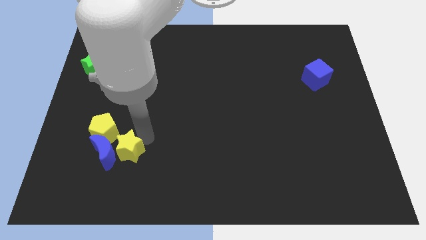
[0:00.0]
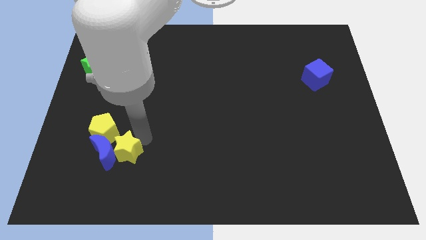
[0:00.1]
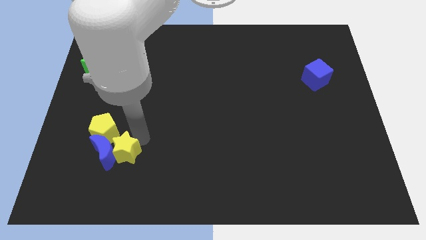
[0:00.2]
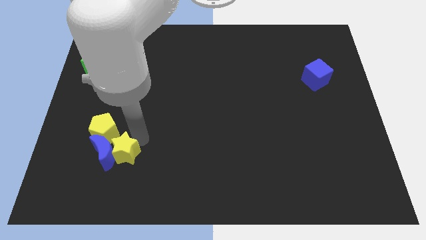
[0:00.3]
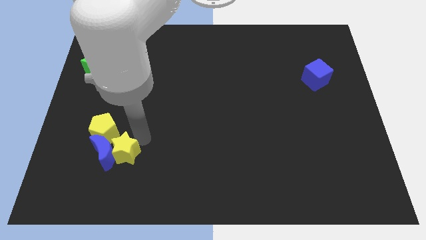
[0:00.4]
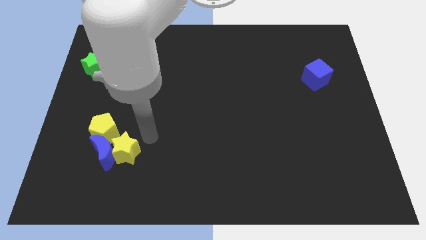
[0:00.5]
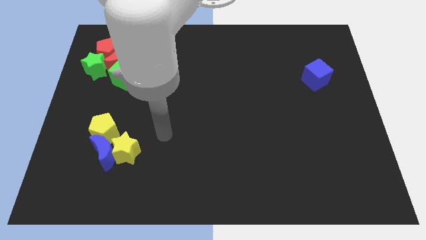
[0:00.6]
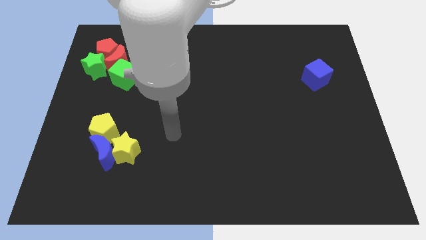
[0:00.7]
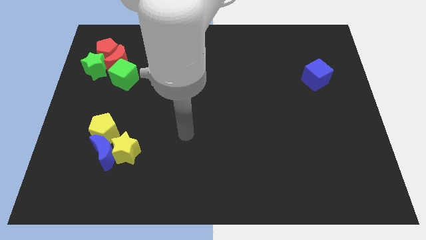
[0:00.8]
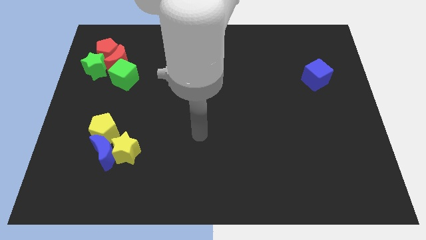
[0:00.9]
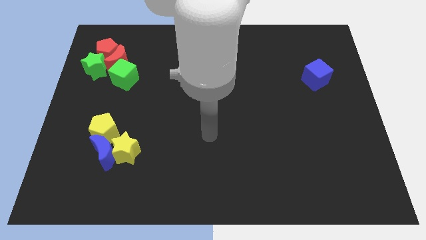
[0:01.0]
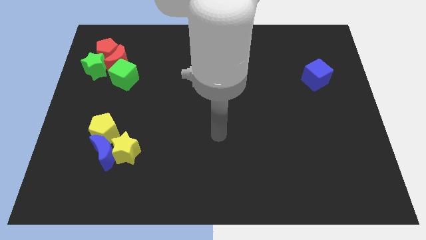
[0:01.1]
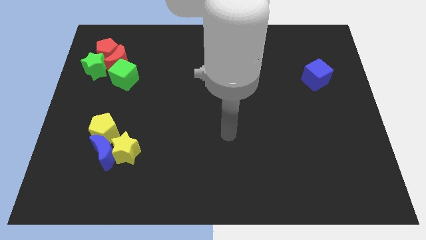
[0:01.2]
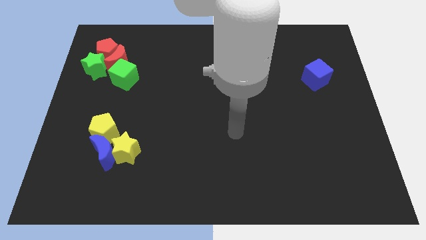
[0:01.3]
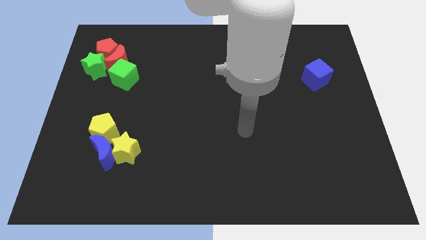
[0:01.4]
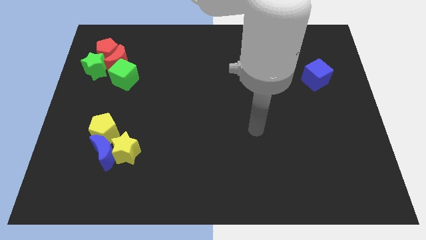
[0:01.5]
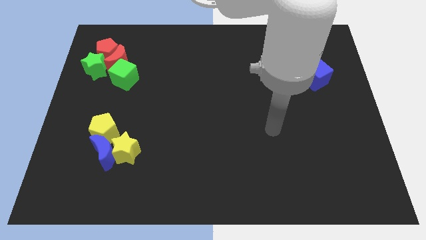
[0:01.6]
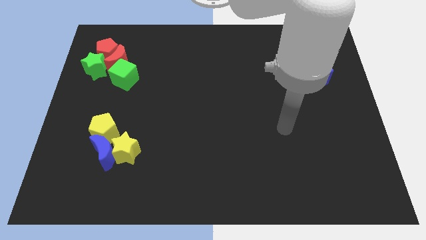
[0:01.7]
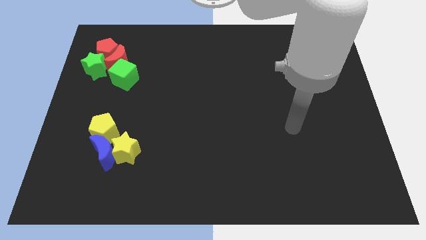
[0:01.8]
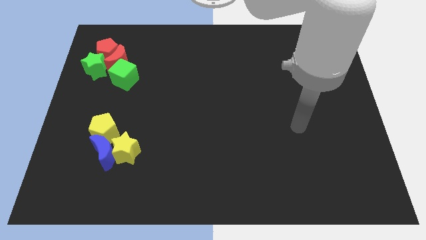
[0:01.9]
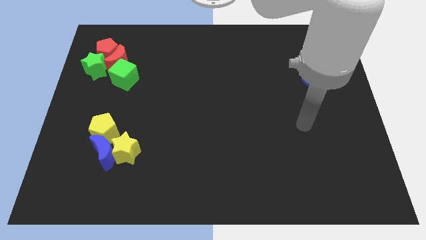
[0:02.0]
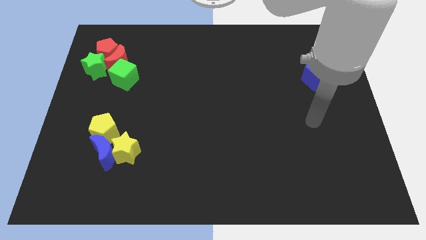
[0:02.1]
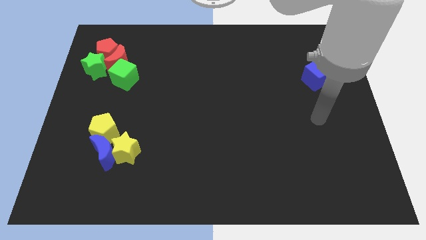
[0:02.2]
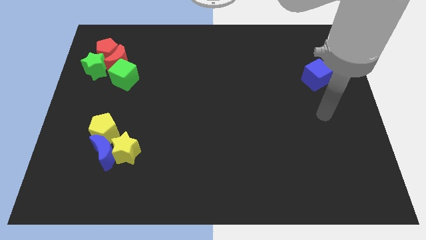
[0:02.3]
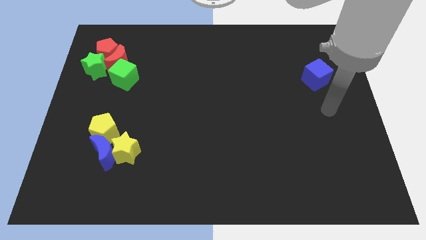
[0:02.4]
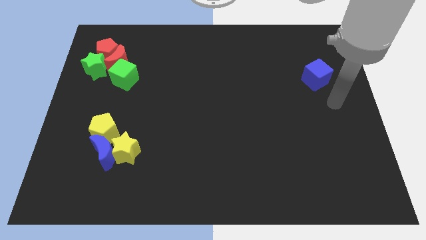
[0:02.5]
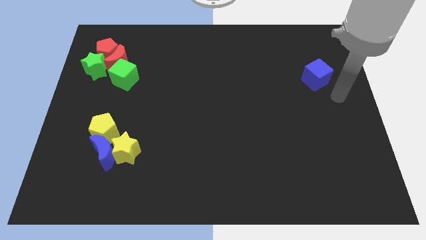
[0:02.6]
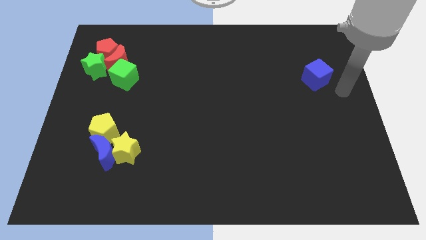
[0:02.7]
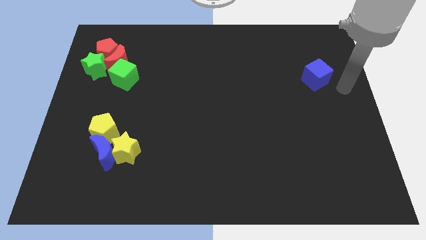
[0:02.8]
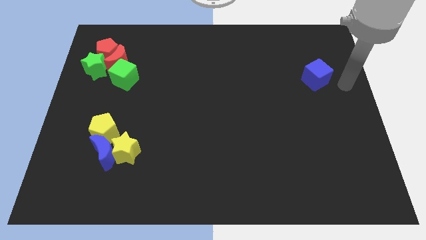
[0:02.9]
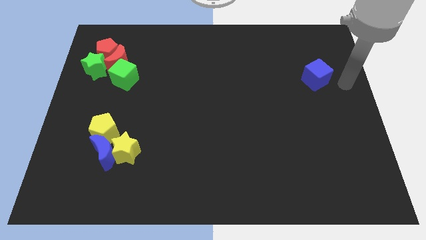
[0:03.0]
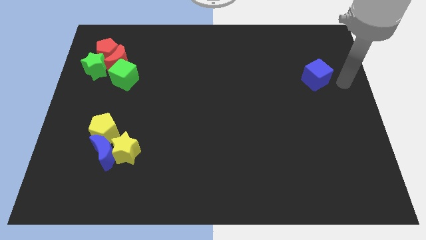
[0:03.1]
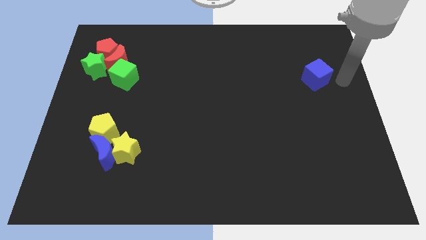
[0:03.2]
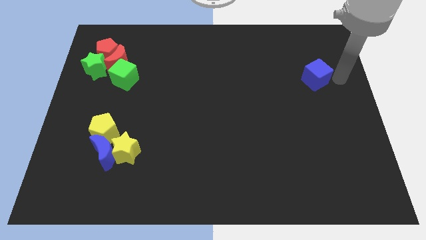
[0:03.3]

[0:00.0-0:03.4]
move the arm away from the yellow star

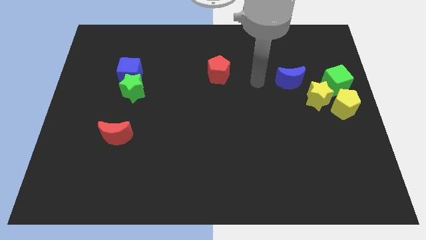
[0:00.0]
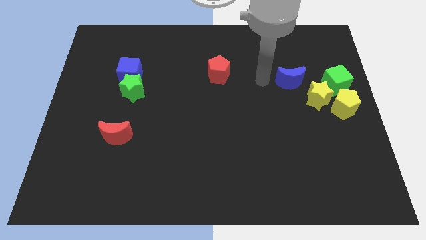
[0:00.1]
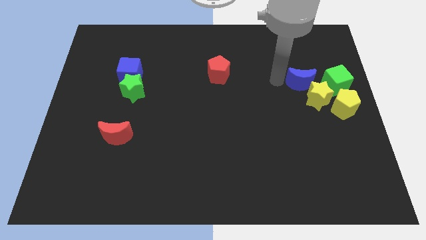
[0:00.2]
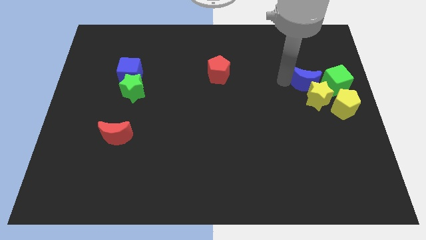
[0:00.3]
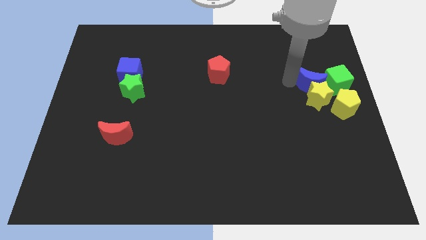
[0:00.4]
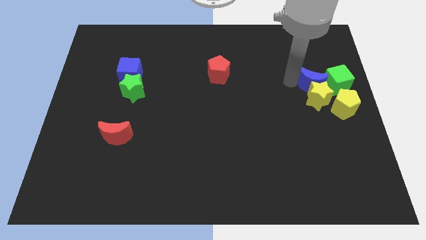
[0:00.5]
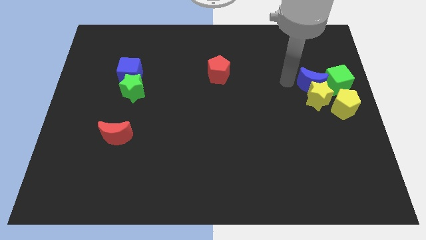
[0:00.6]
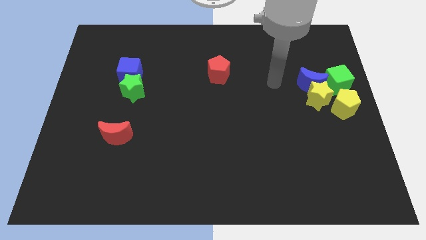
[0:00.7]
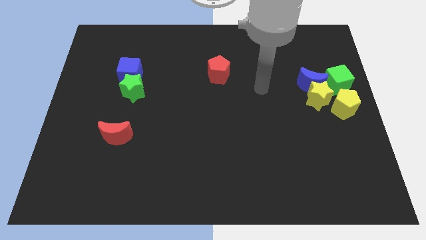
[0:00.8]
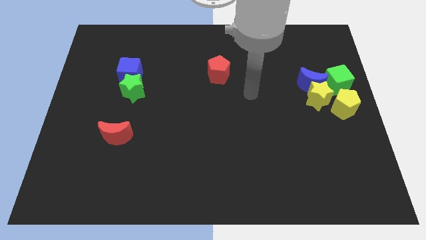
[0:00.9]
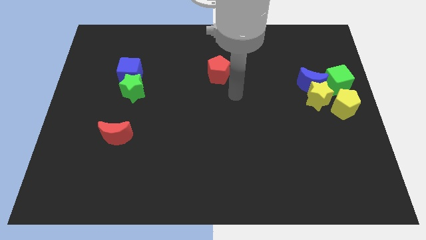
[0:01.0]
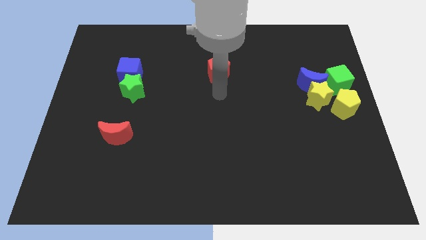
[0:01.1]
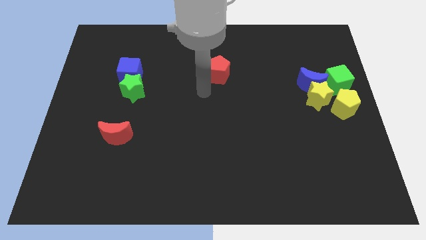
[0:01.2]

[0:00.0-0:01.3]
push the blue moon into the green cube

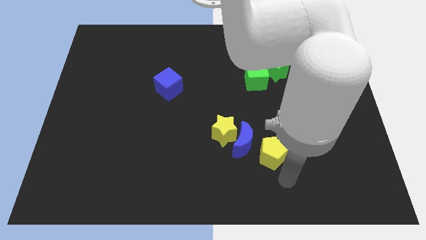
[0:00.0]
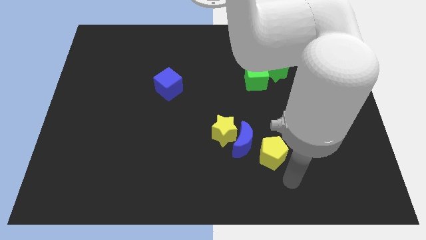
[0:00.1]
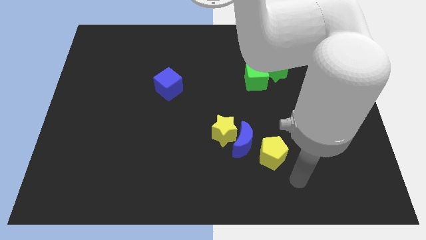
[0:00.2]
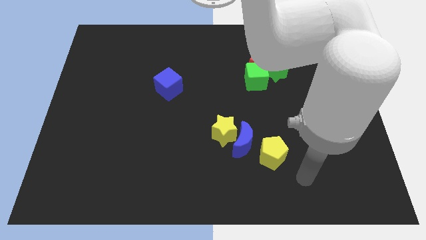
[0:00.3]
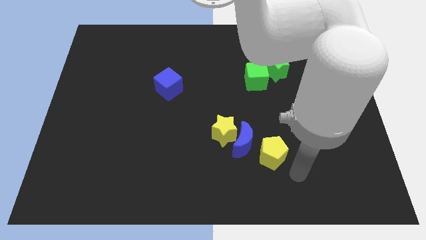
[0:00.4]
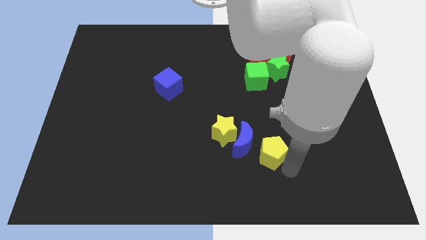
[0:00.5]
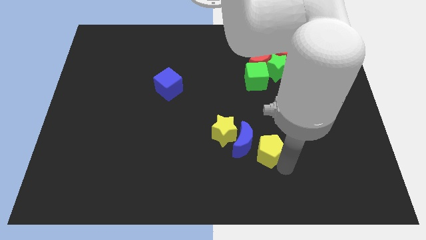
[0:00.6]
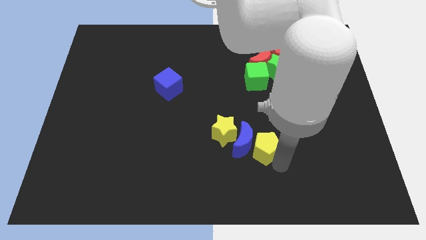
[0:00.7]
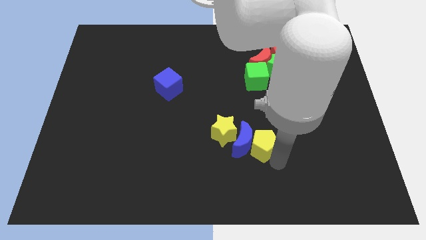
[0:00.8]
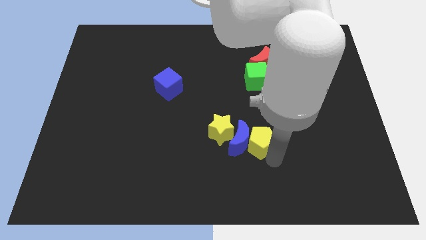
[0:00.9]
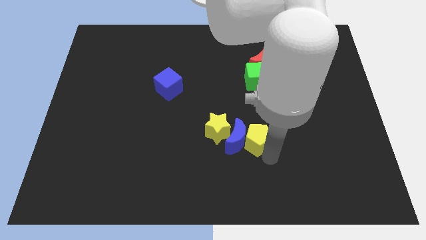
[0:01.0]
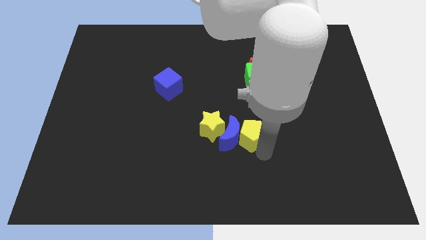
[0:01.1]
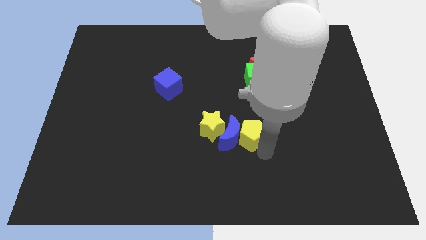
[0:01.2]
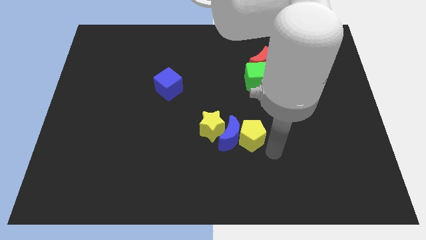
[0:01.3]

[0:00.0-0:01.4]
move yellow pentagon into blue moon

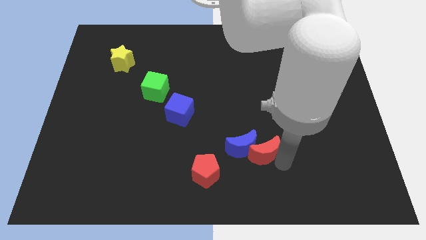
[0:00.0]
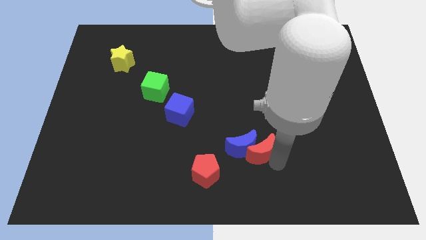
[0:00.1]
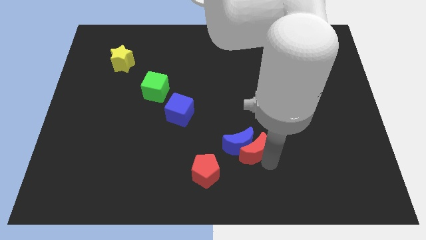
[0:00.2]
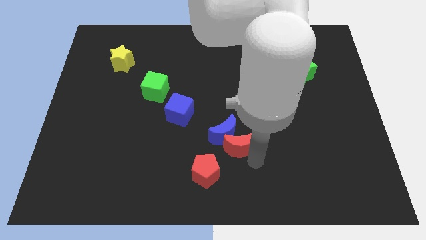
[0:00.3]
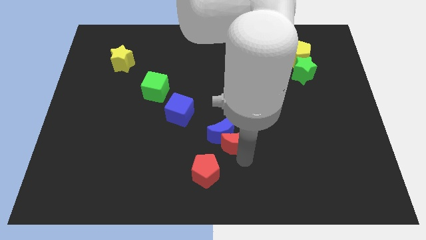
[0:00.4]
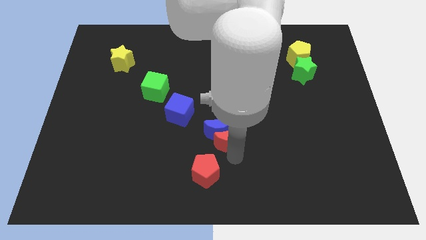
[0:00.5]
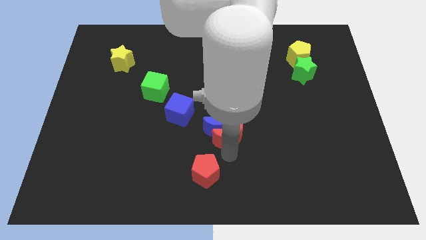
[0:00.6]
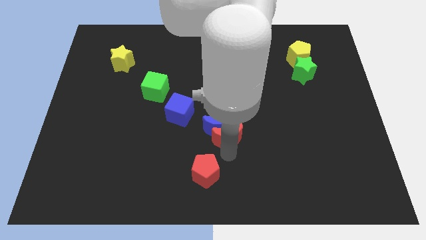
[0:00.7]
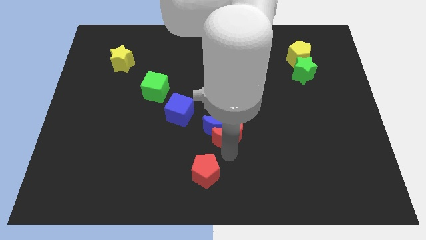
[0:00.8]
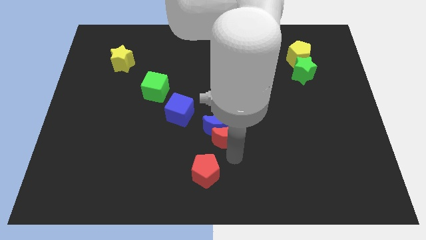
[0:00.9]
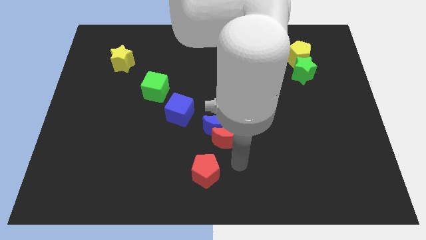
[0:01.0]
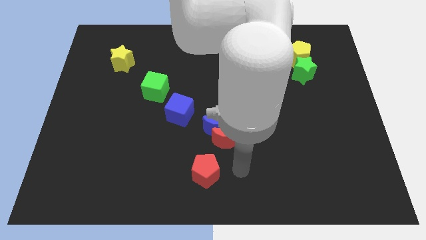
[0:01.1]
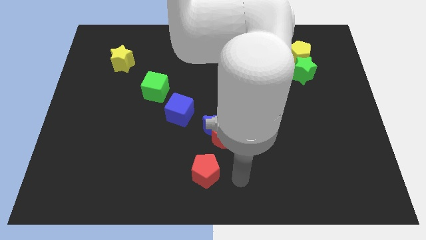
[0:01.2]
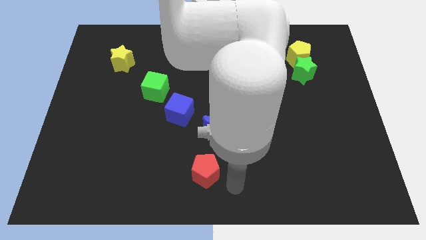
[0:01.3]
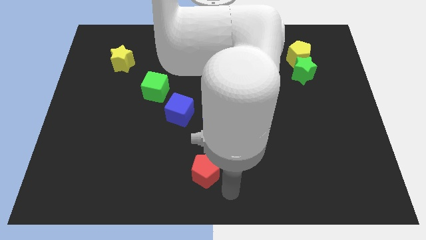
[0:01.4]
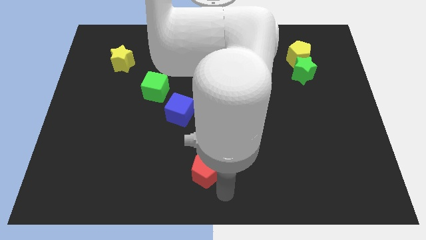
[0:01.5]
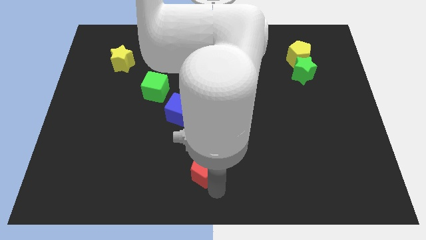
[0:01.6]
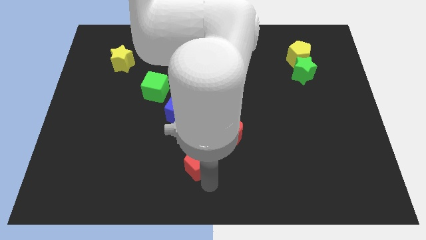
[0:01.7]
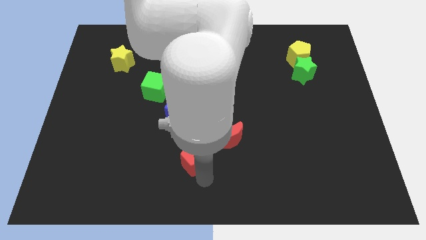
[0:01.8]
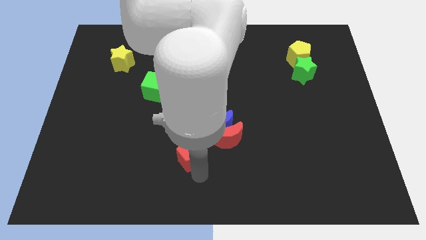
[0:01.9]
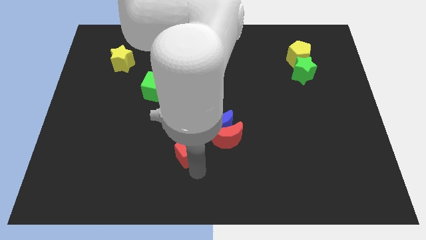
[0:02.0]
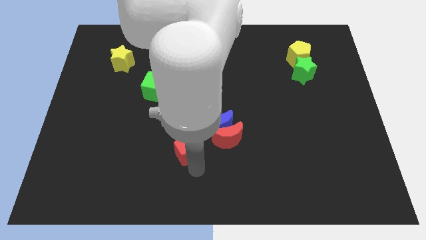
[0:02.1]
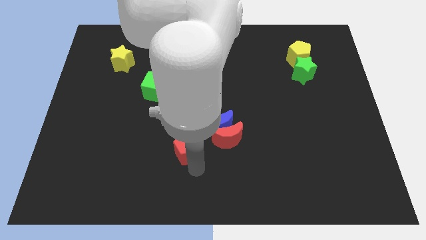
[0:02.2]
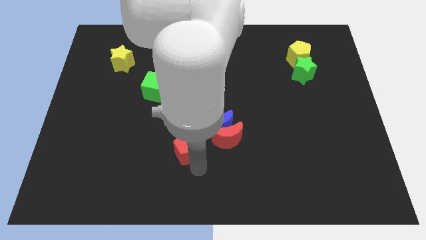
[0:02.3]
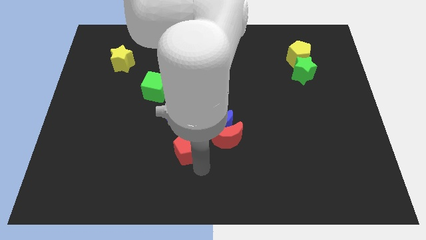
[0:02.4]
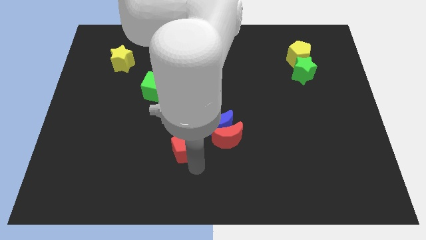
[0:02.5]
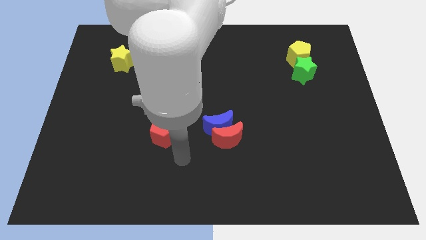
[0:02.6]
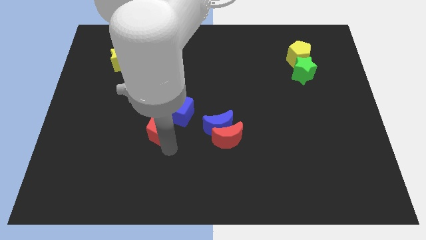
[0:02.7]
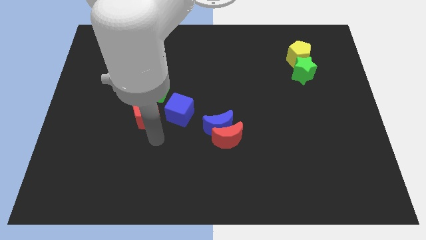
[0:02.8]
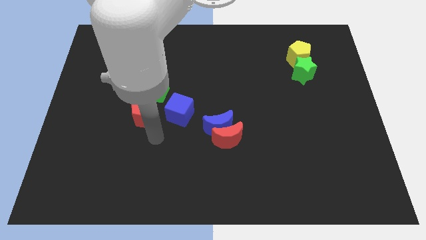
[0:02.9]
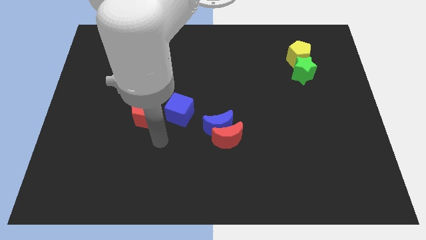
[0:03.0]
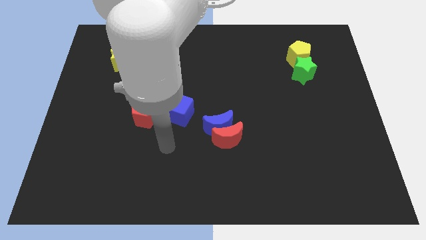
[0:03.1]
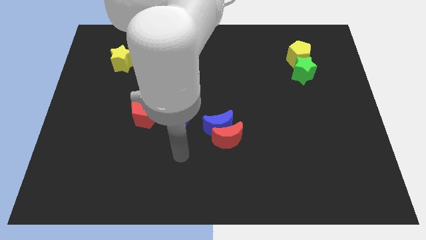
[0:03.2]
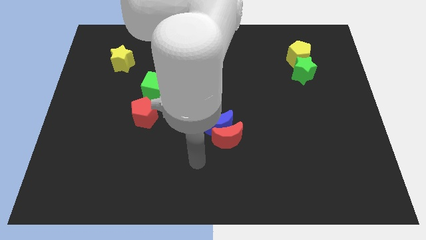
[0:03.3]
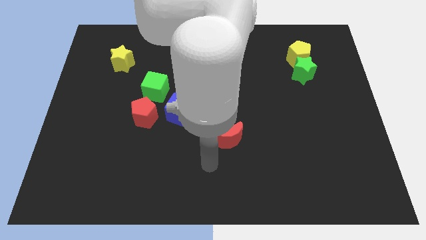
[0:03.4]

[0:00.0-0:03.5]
move the red pentagon towards the green cube
